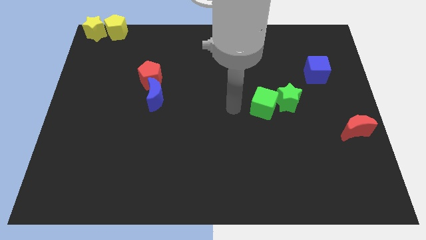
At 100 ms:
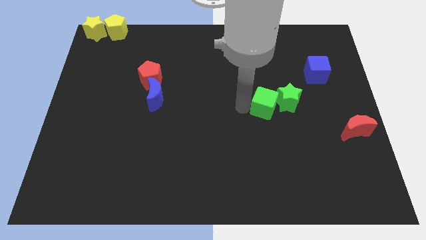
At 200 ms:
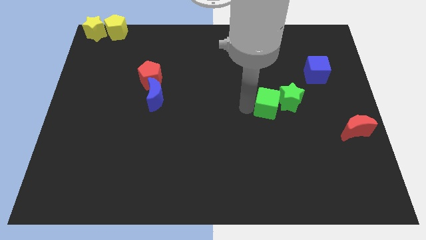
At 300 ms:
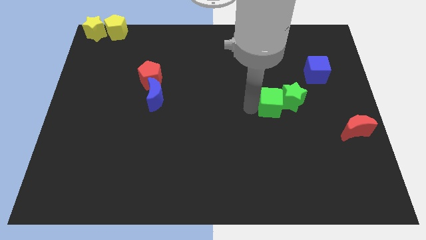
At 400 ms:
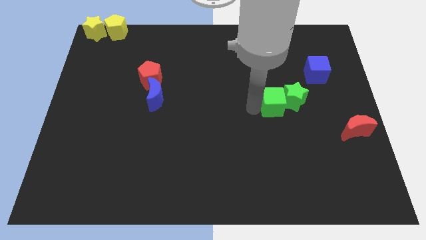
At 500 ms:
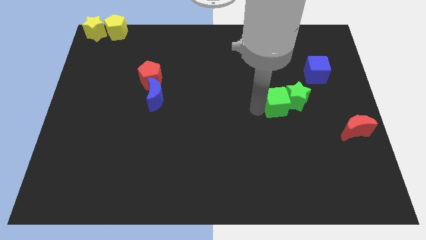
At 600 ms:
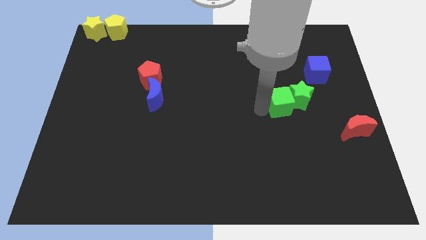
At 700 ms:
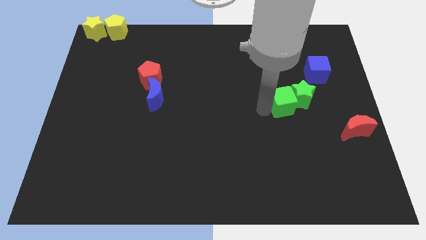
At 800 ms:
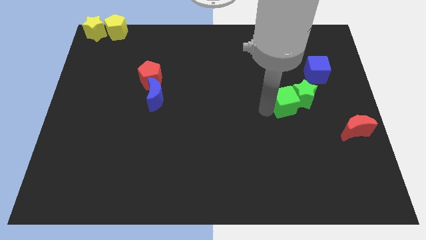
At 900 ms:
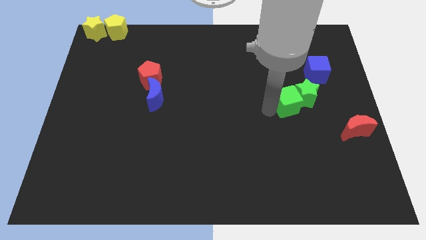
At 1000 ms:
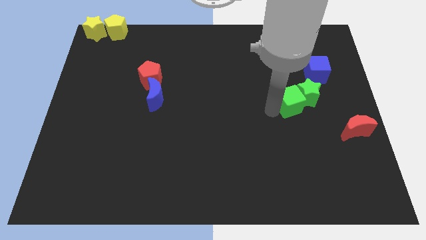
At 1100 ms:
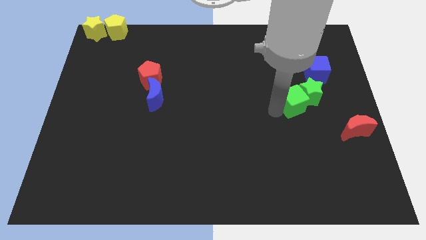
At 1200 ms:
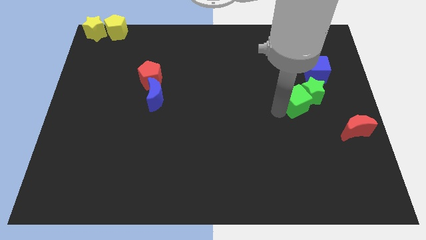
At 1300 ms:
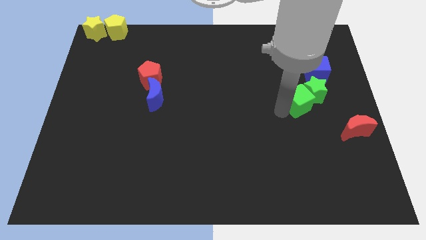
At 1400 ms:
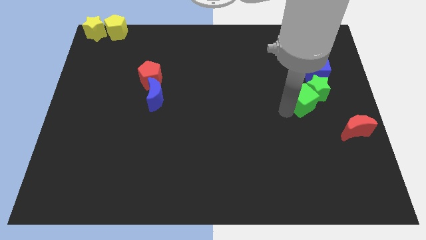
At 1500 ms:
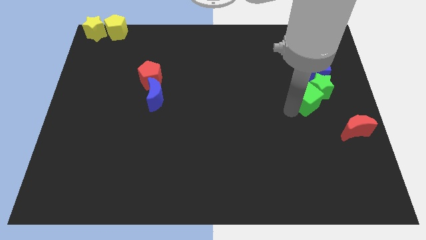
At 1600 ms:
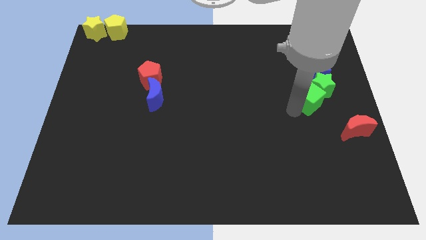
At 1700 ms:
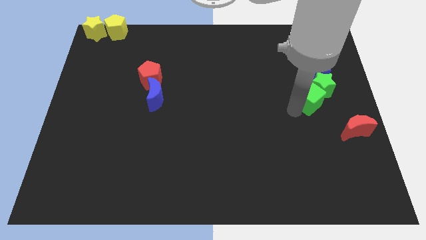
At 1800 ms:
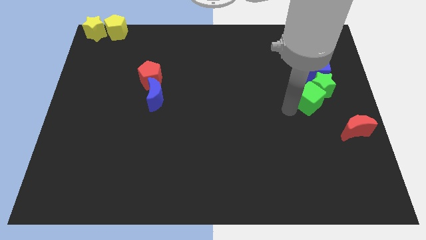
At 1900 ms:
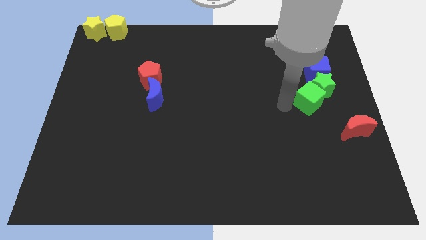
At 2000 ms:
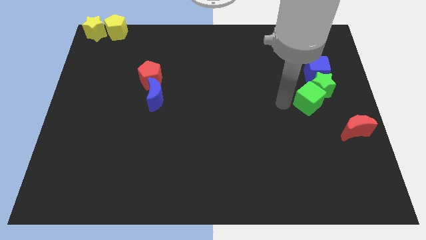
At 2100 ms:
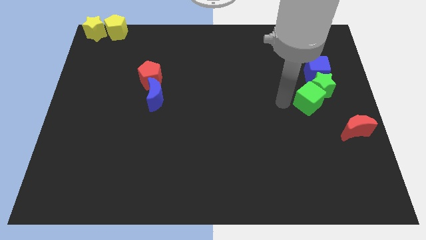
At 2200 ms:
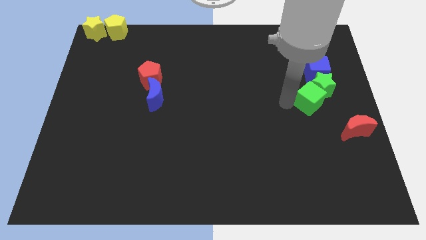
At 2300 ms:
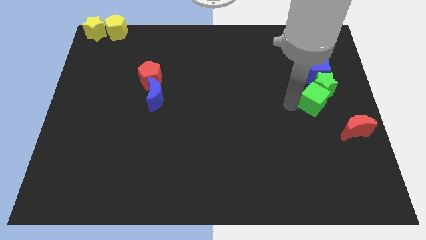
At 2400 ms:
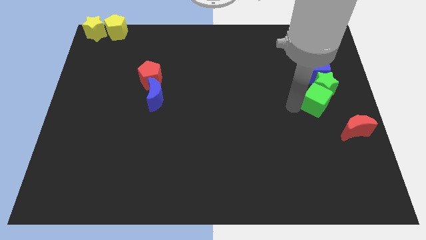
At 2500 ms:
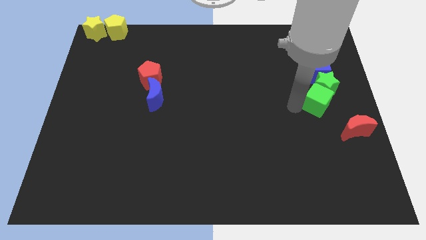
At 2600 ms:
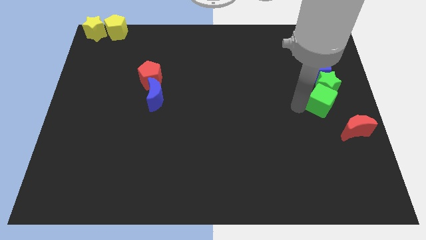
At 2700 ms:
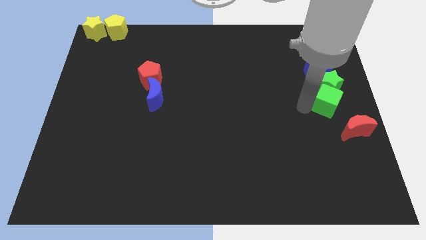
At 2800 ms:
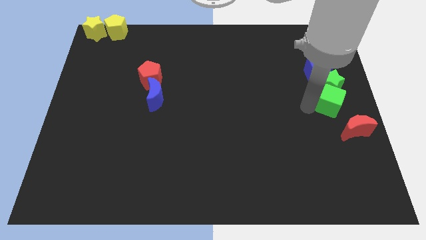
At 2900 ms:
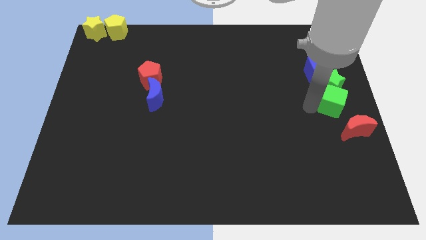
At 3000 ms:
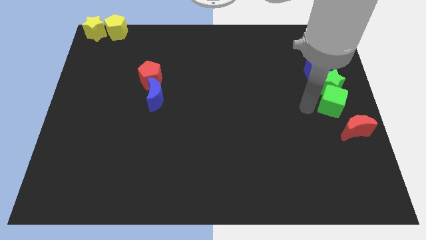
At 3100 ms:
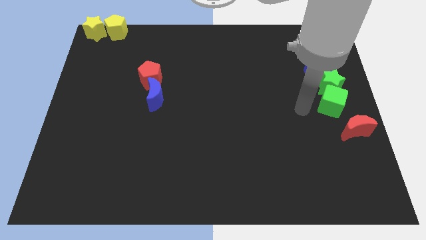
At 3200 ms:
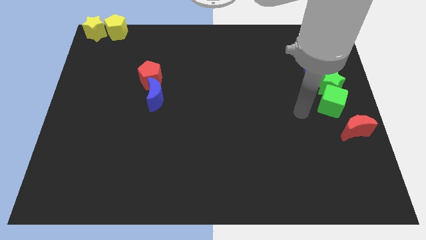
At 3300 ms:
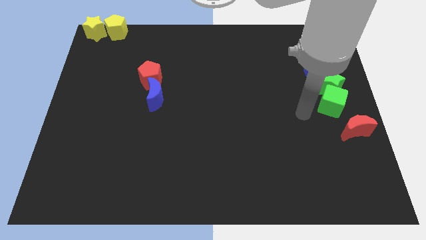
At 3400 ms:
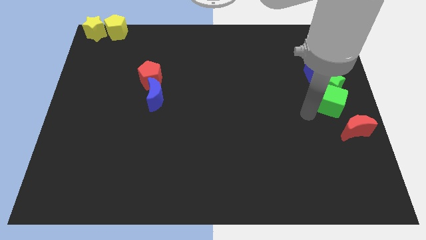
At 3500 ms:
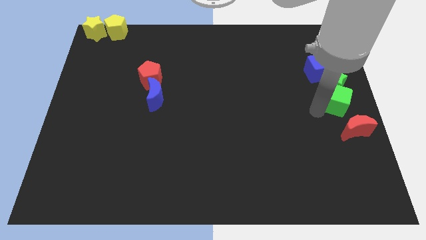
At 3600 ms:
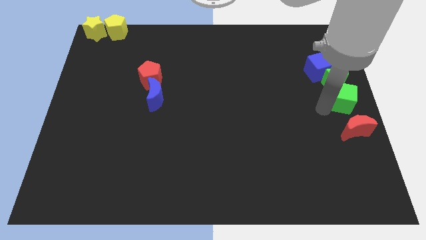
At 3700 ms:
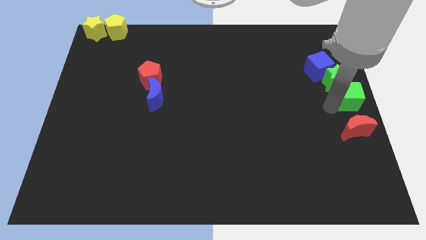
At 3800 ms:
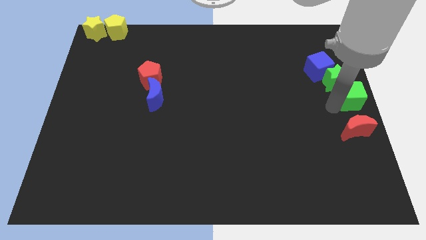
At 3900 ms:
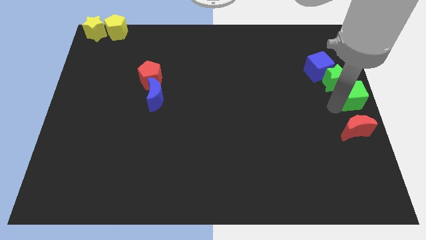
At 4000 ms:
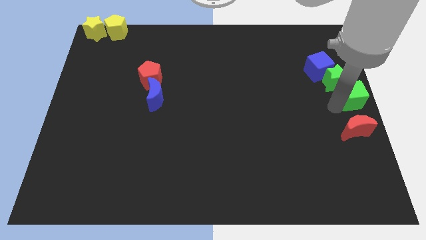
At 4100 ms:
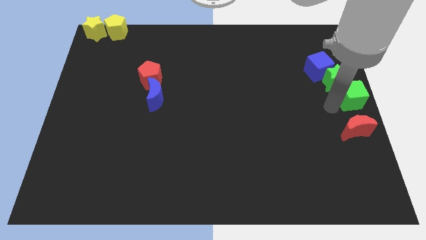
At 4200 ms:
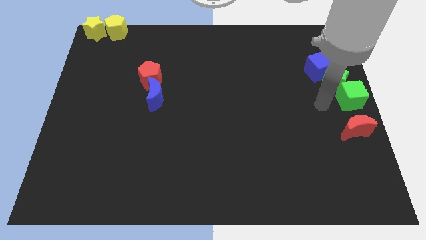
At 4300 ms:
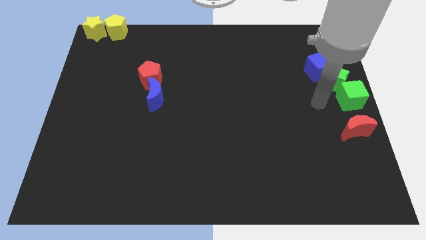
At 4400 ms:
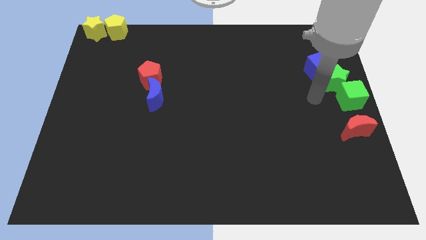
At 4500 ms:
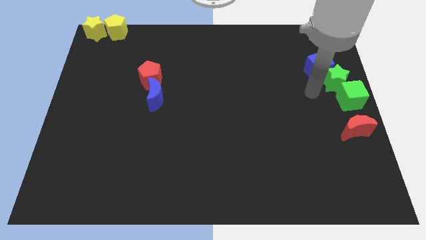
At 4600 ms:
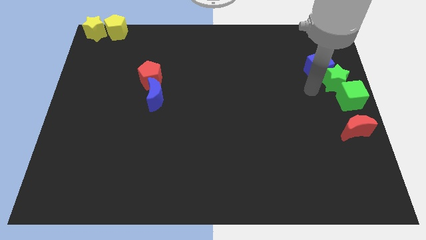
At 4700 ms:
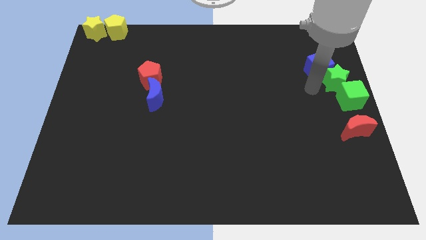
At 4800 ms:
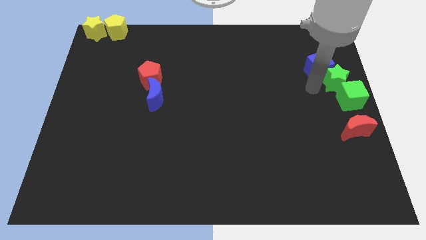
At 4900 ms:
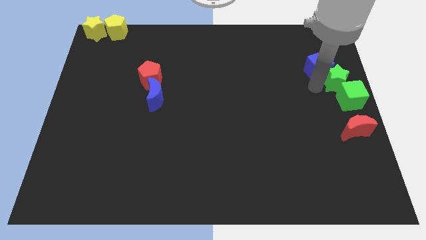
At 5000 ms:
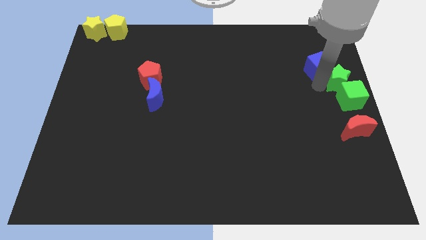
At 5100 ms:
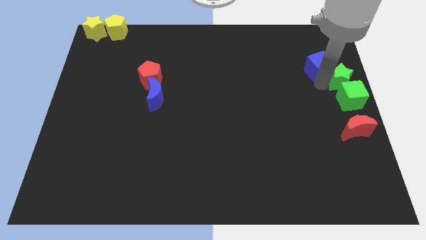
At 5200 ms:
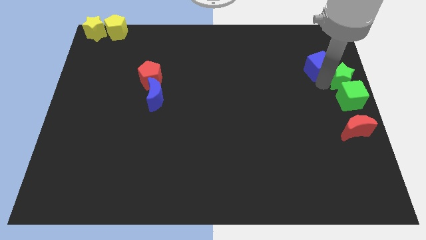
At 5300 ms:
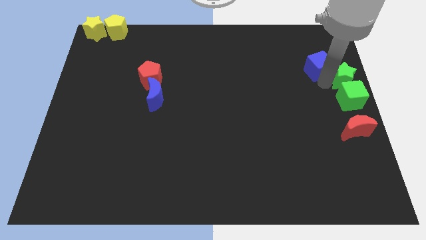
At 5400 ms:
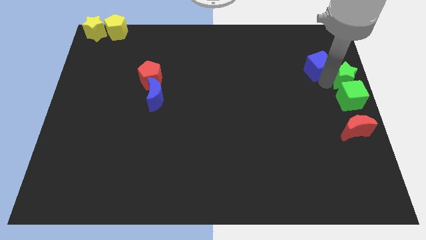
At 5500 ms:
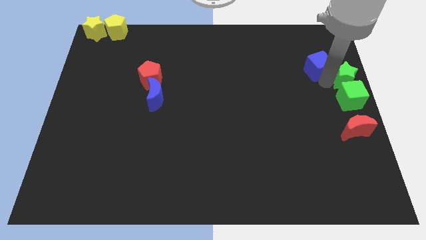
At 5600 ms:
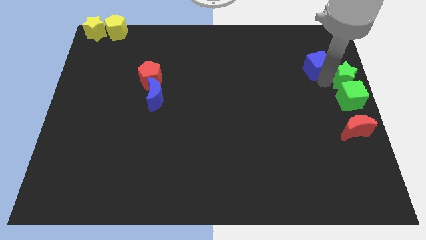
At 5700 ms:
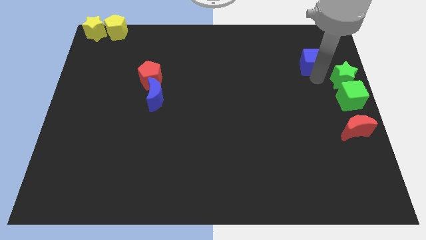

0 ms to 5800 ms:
place the green star and green cube to the right center of the board

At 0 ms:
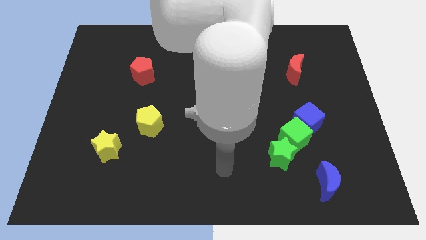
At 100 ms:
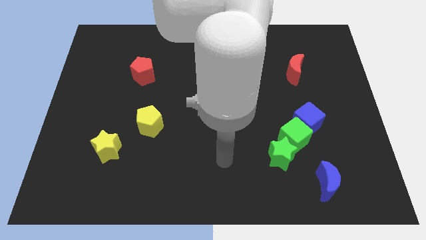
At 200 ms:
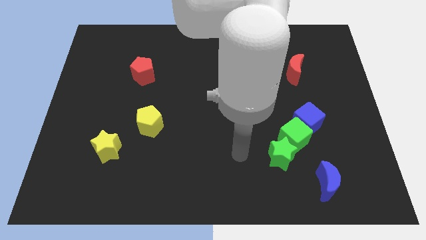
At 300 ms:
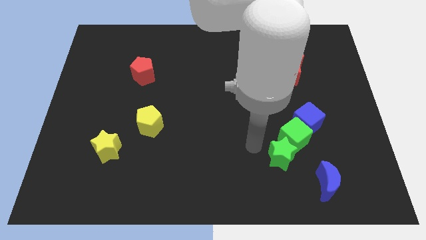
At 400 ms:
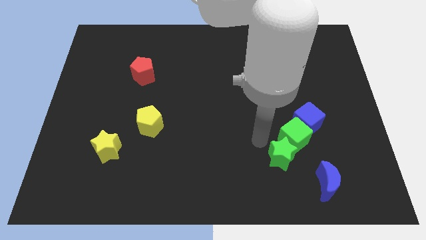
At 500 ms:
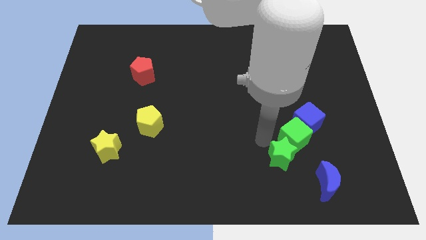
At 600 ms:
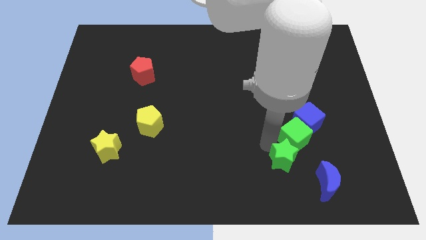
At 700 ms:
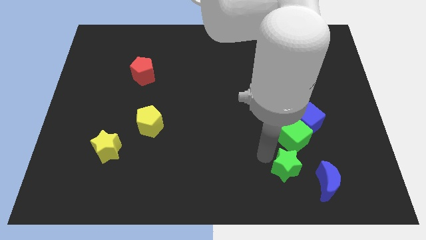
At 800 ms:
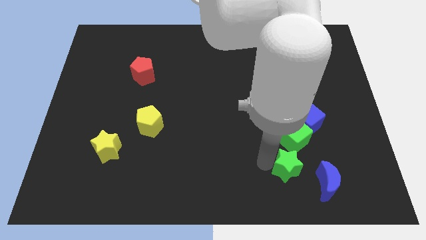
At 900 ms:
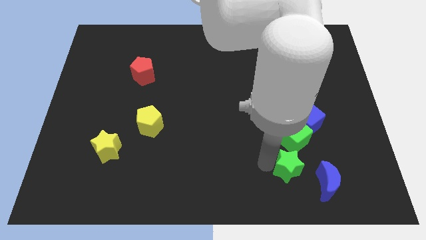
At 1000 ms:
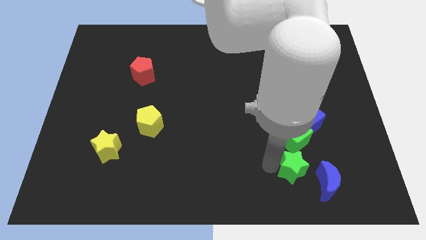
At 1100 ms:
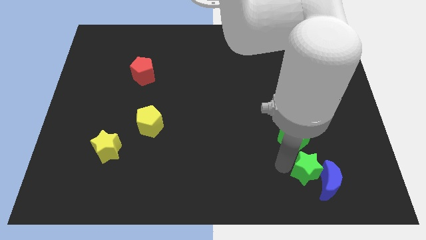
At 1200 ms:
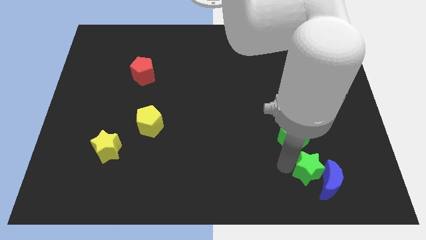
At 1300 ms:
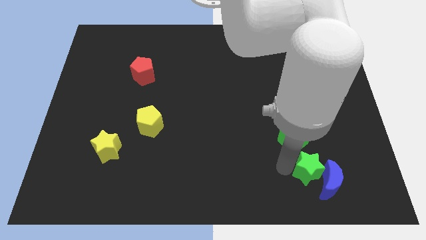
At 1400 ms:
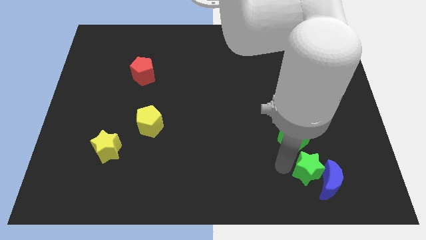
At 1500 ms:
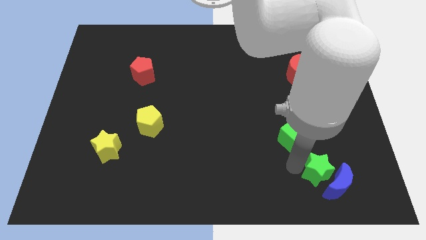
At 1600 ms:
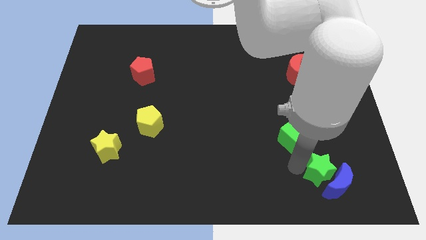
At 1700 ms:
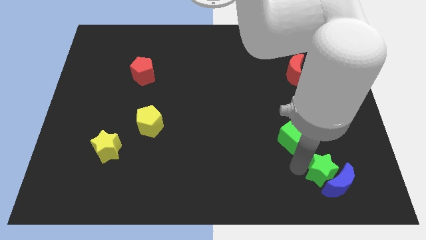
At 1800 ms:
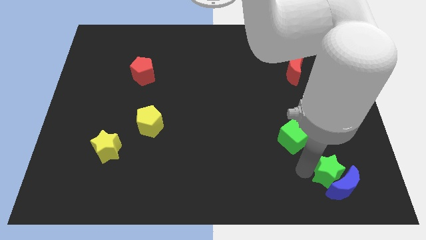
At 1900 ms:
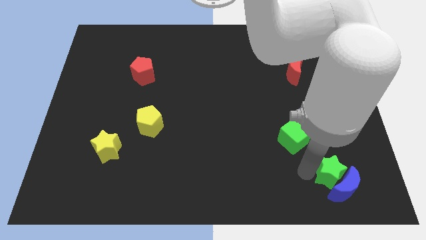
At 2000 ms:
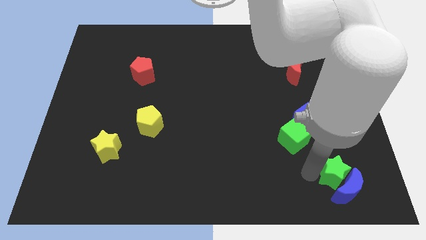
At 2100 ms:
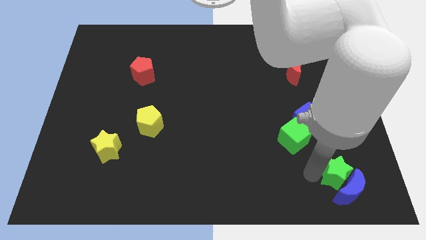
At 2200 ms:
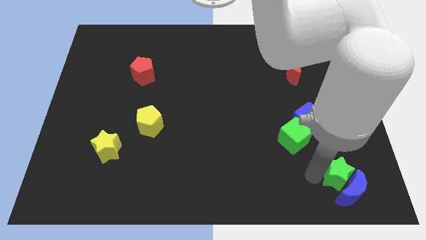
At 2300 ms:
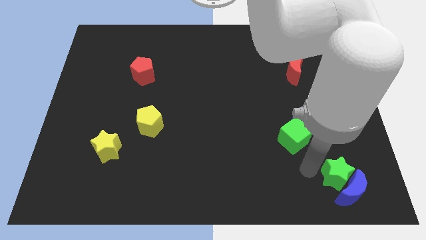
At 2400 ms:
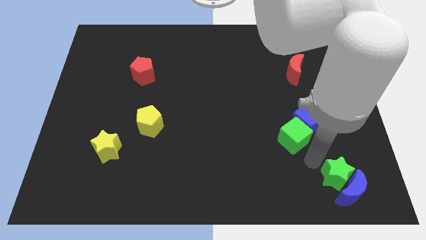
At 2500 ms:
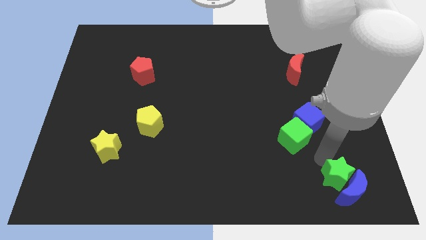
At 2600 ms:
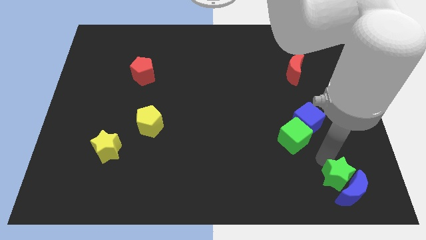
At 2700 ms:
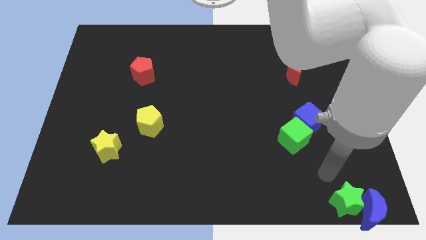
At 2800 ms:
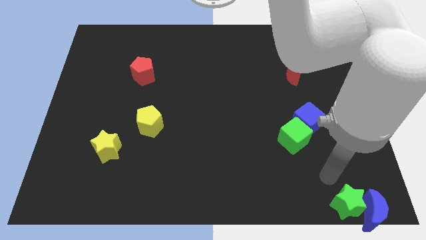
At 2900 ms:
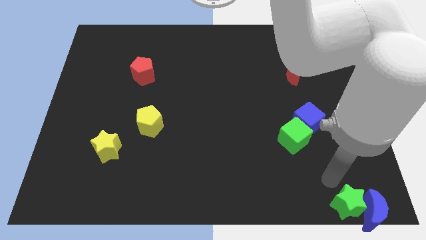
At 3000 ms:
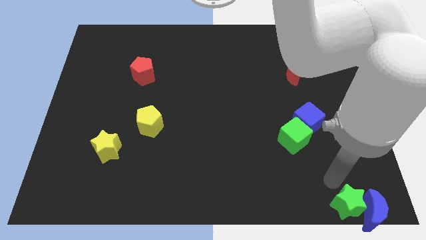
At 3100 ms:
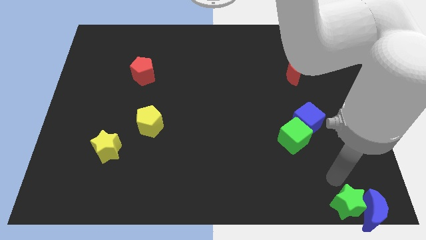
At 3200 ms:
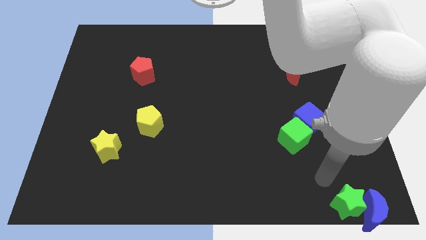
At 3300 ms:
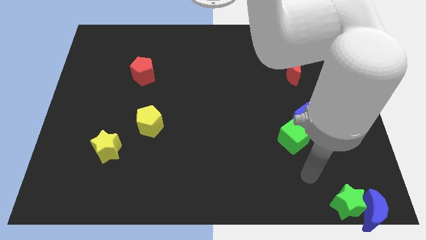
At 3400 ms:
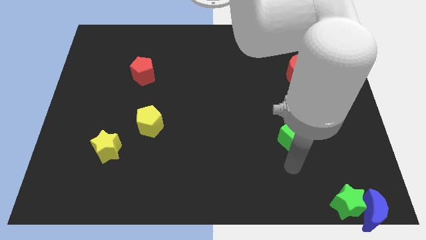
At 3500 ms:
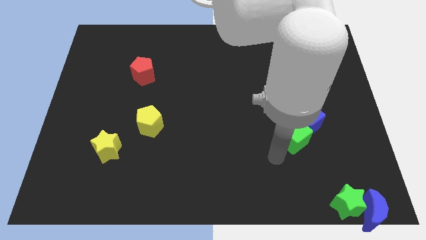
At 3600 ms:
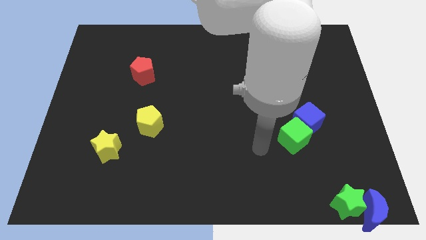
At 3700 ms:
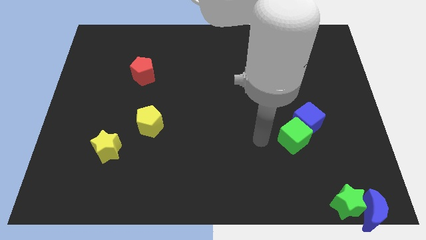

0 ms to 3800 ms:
push the green star into the blue crescent
